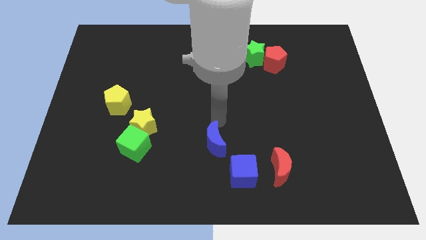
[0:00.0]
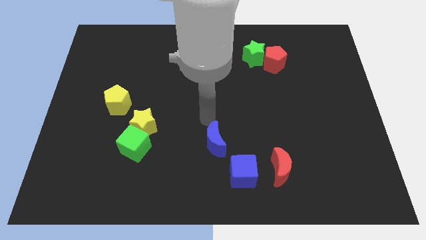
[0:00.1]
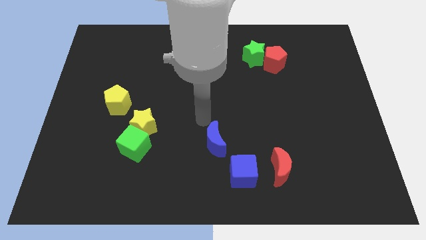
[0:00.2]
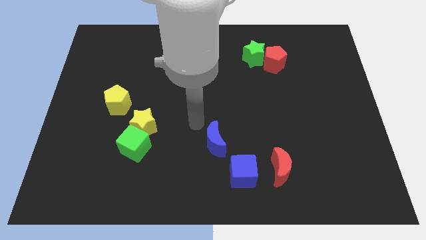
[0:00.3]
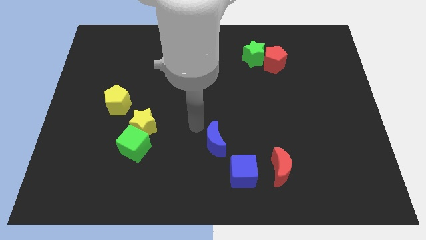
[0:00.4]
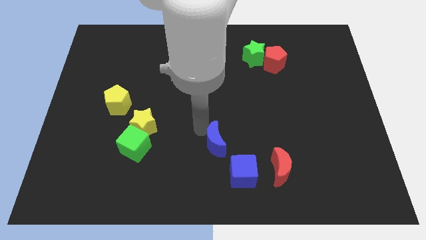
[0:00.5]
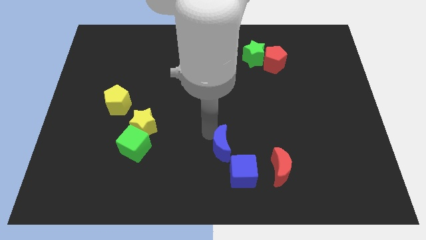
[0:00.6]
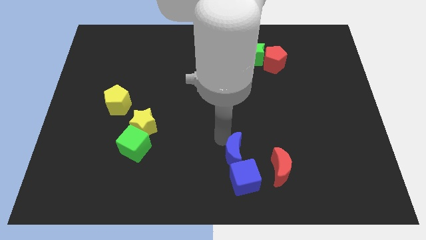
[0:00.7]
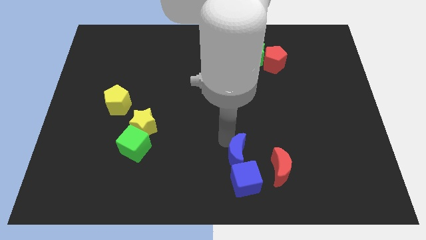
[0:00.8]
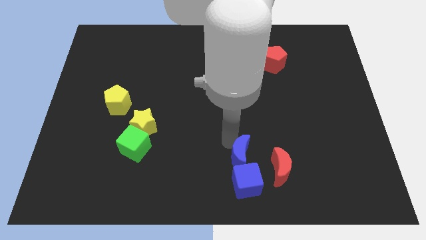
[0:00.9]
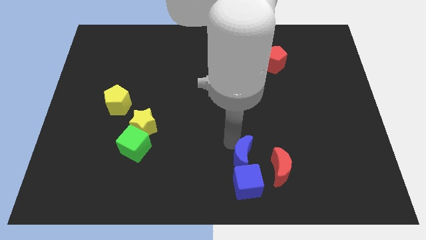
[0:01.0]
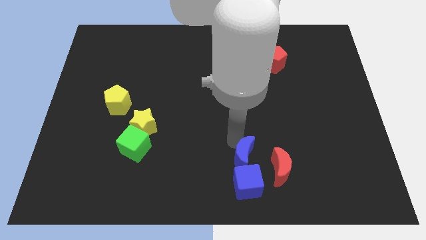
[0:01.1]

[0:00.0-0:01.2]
slide the blue crescent to the top side of the blue cube

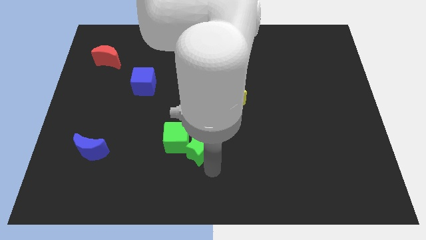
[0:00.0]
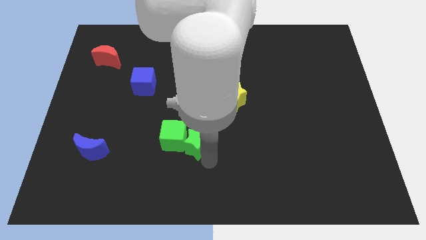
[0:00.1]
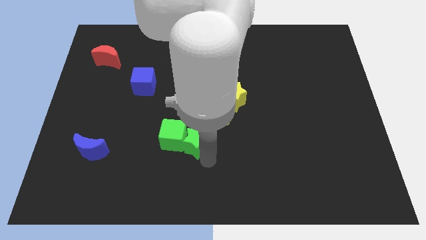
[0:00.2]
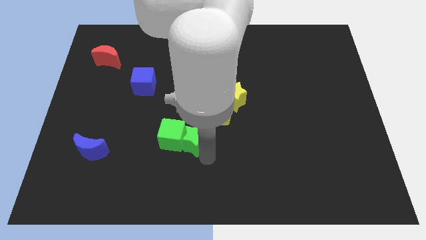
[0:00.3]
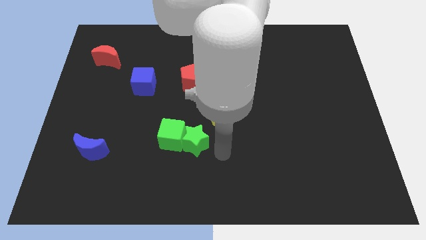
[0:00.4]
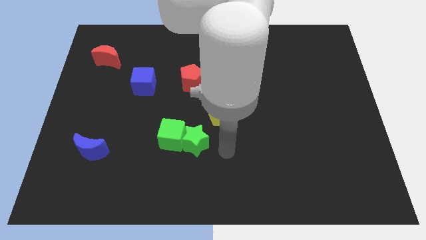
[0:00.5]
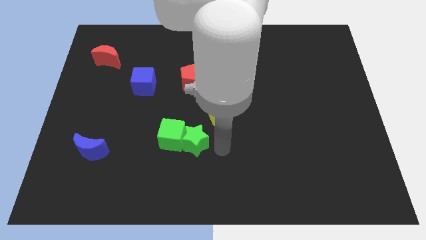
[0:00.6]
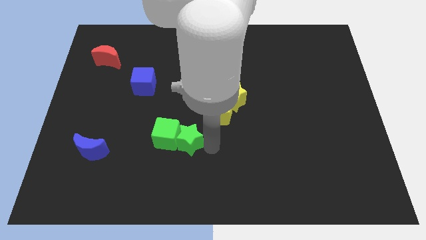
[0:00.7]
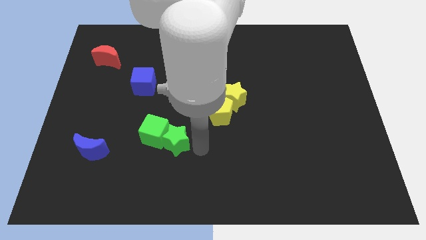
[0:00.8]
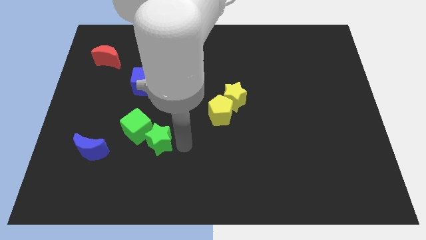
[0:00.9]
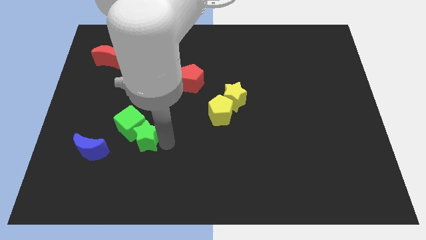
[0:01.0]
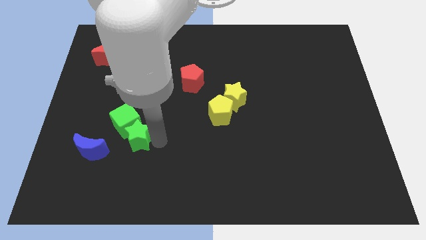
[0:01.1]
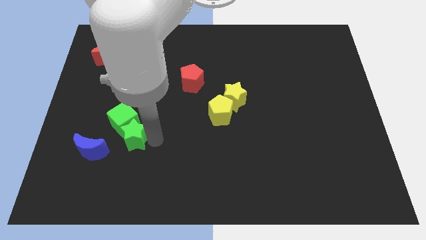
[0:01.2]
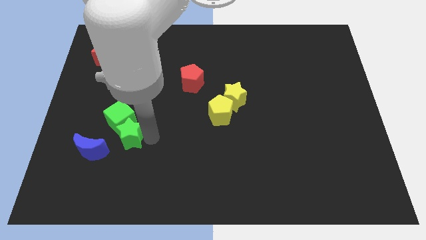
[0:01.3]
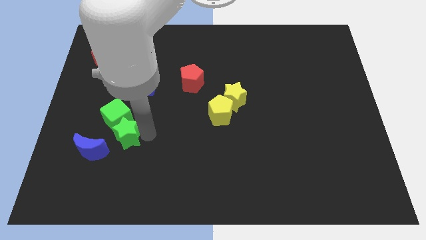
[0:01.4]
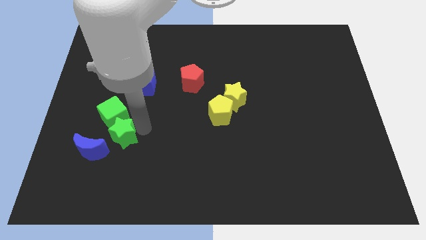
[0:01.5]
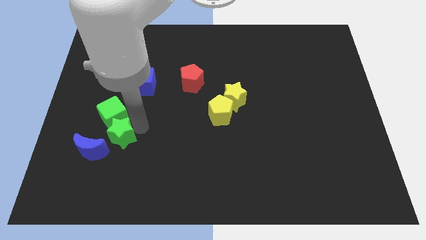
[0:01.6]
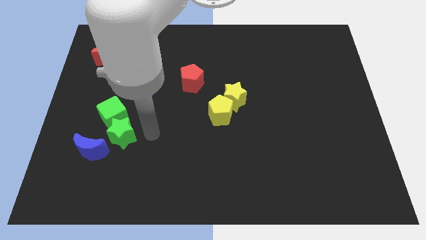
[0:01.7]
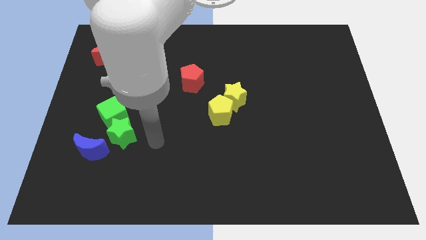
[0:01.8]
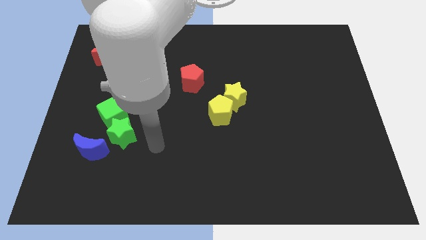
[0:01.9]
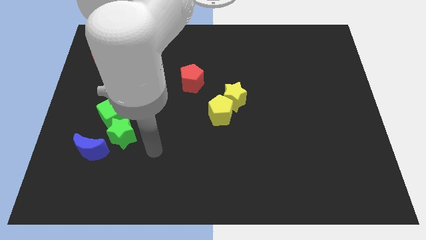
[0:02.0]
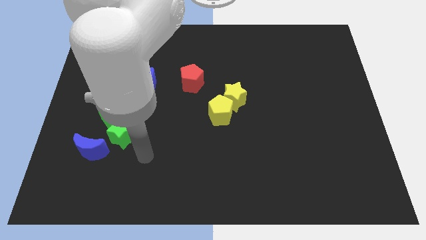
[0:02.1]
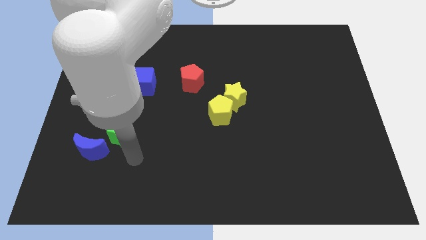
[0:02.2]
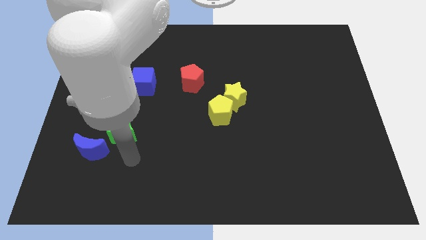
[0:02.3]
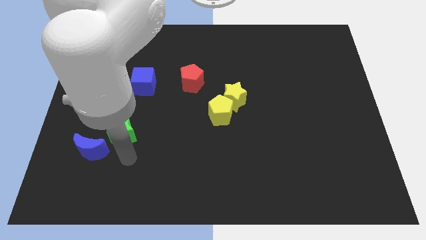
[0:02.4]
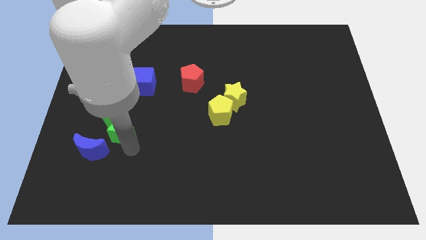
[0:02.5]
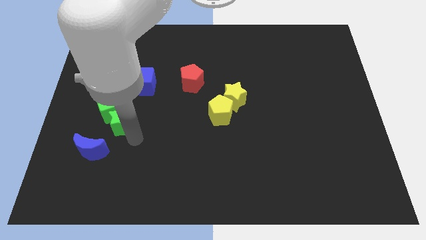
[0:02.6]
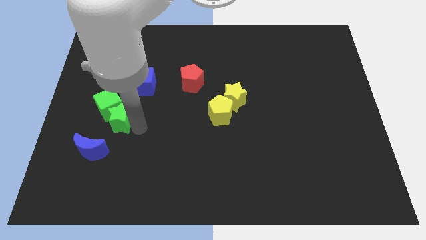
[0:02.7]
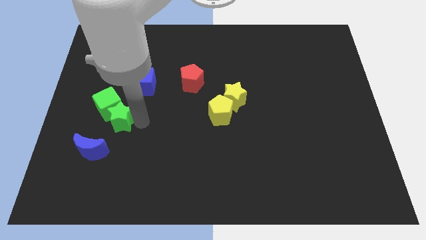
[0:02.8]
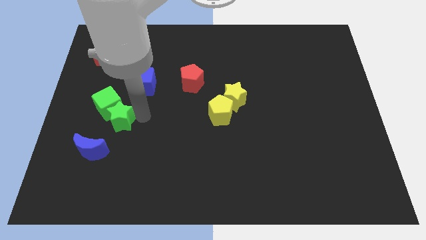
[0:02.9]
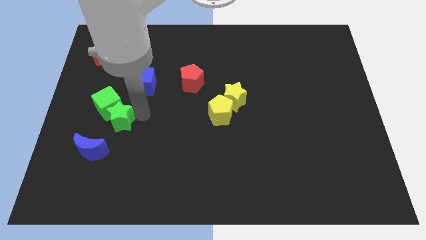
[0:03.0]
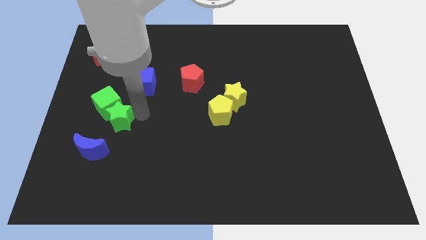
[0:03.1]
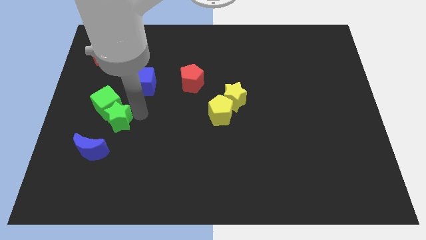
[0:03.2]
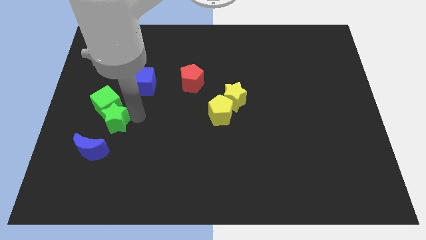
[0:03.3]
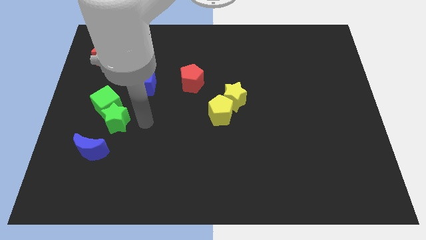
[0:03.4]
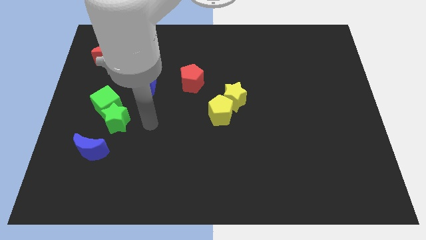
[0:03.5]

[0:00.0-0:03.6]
move the green blocks slightly left

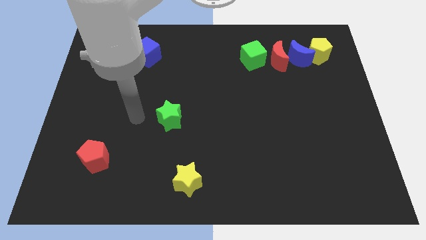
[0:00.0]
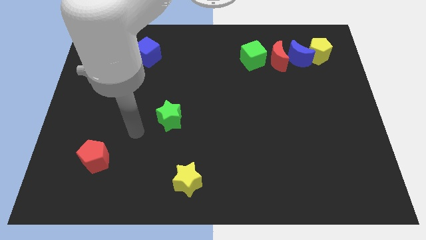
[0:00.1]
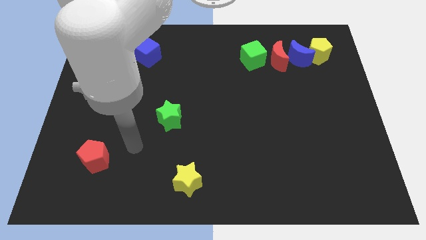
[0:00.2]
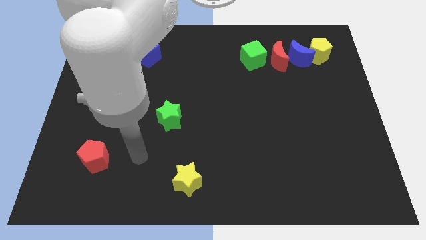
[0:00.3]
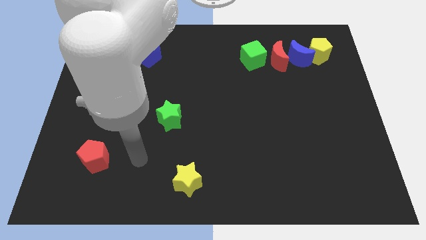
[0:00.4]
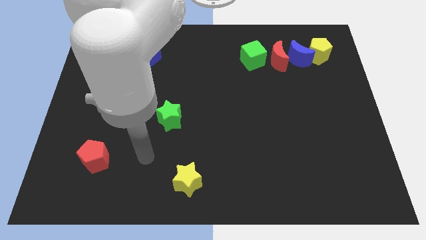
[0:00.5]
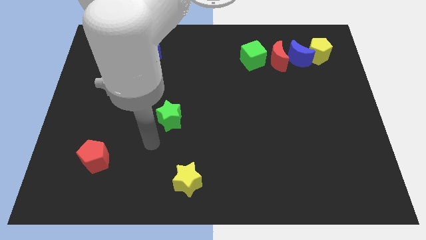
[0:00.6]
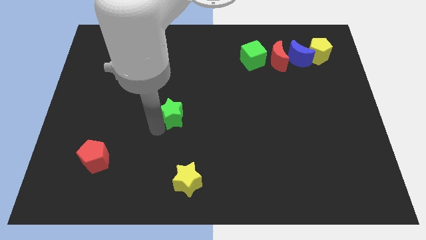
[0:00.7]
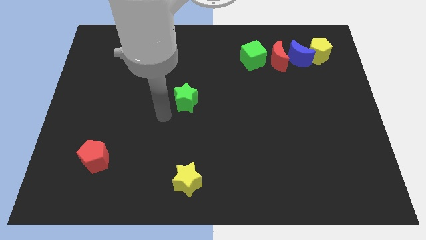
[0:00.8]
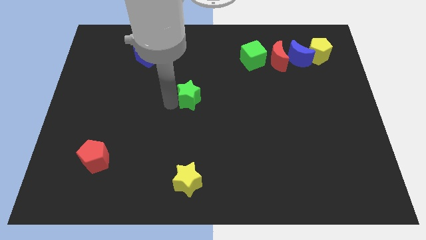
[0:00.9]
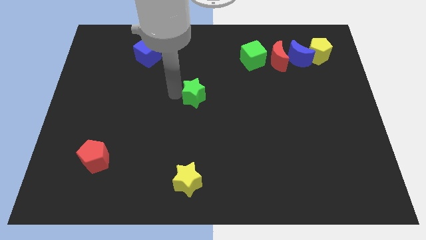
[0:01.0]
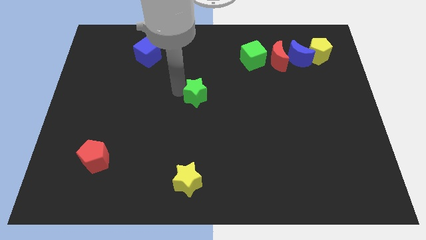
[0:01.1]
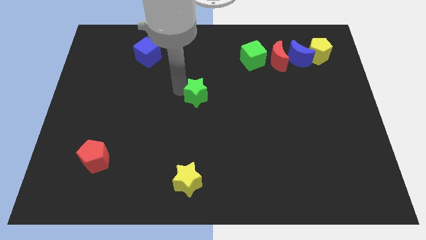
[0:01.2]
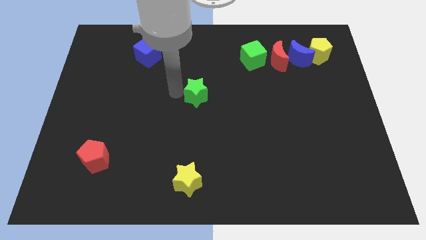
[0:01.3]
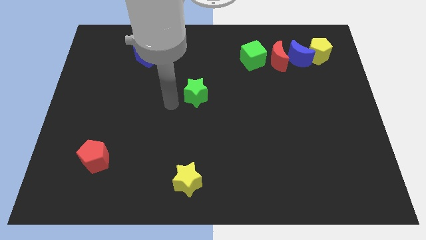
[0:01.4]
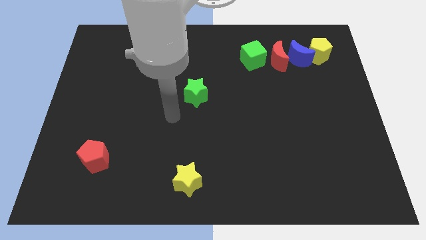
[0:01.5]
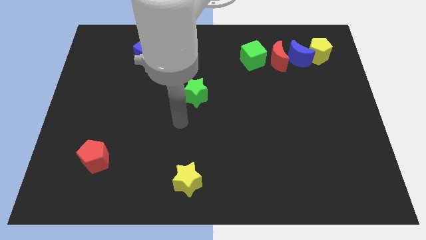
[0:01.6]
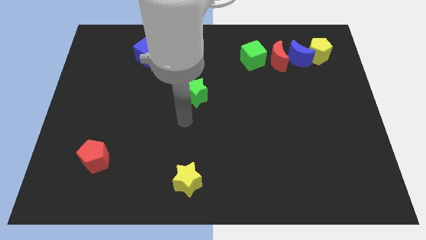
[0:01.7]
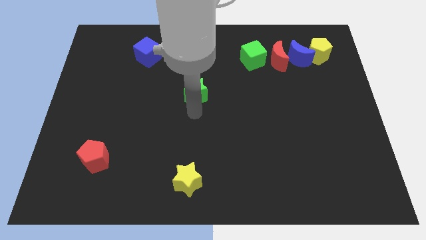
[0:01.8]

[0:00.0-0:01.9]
move the green star vertically above the yellow star

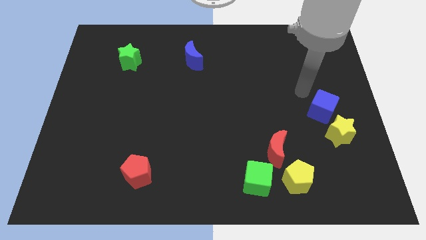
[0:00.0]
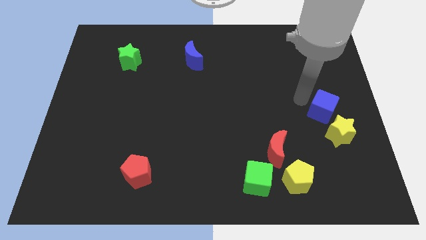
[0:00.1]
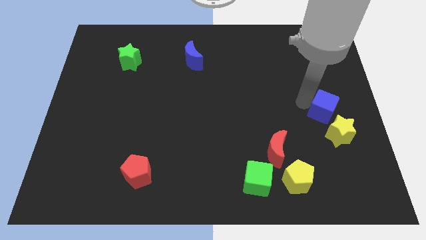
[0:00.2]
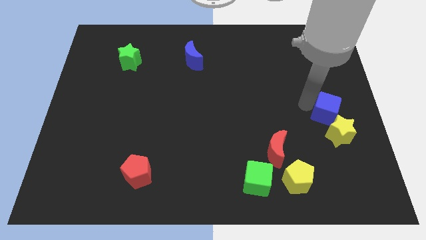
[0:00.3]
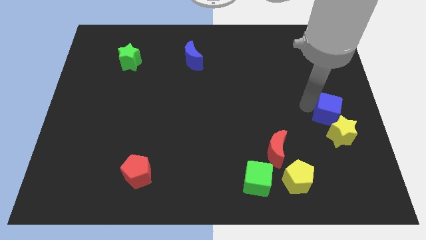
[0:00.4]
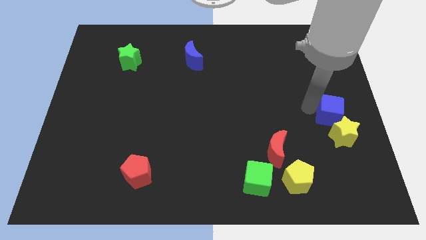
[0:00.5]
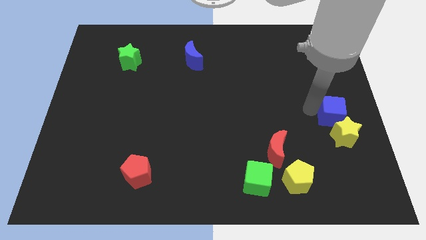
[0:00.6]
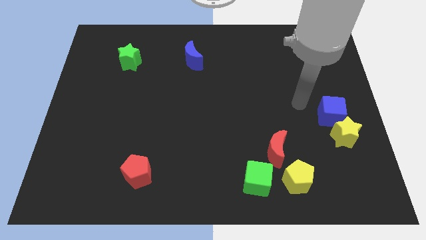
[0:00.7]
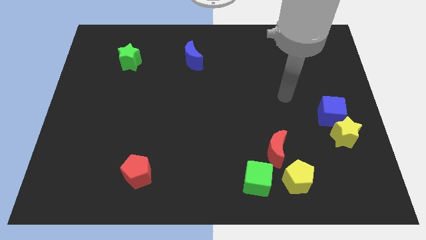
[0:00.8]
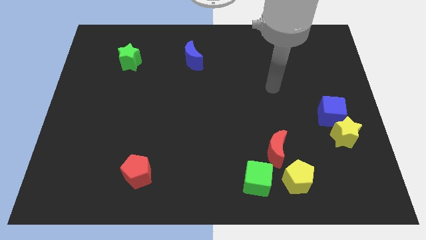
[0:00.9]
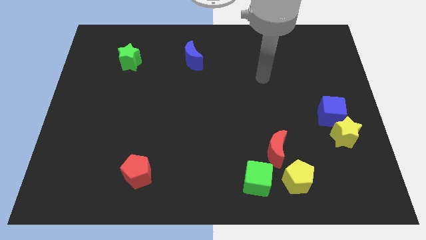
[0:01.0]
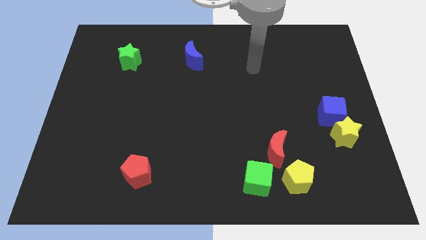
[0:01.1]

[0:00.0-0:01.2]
push the blue cube into yellow star

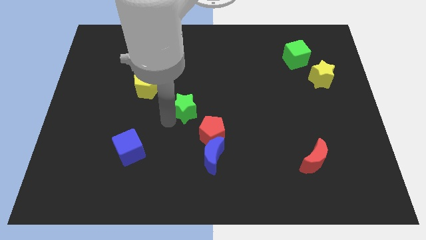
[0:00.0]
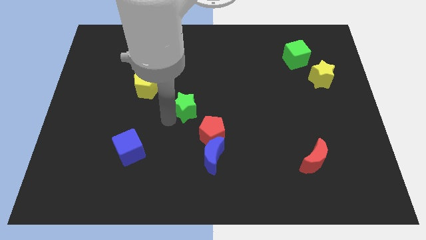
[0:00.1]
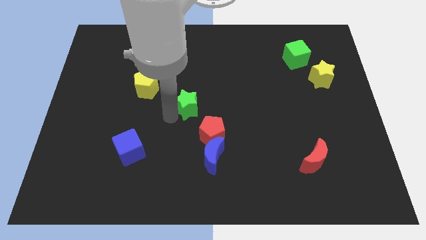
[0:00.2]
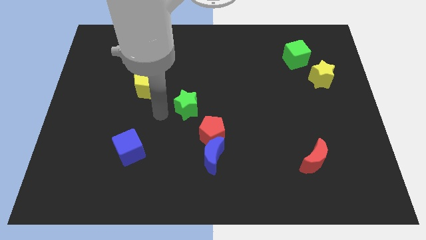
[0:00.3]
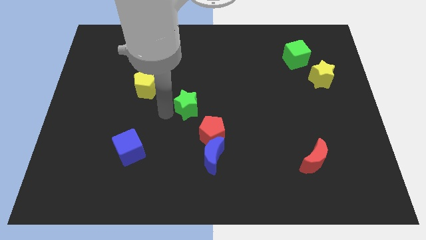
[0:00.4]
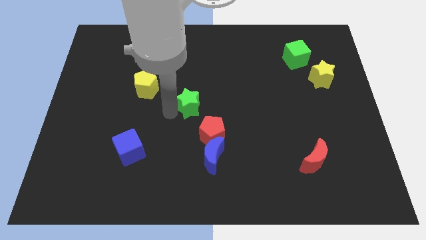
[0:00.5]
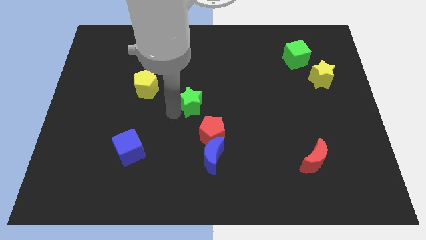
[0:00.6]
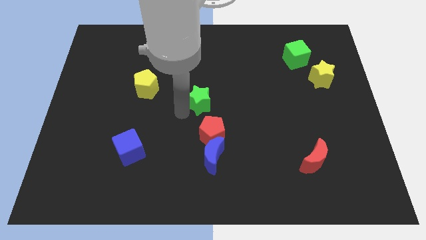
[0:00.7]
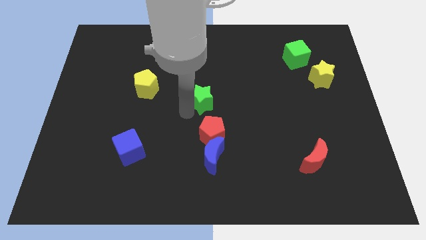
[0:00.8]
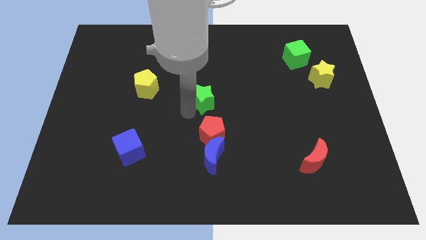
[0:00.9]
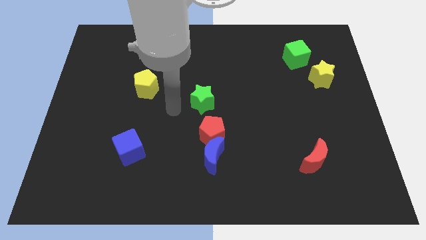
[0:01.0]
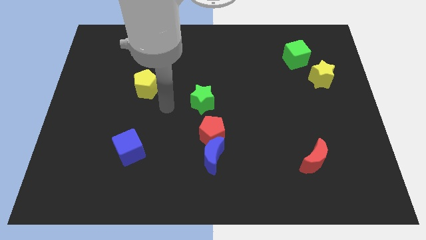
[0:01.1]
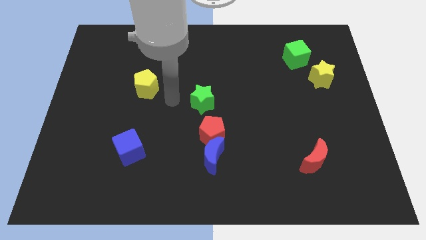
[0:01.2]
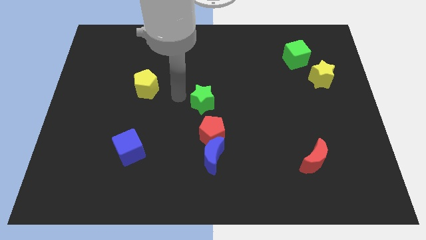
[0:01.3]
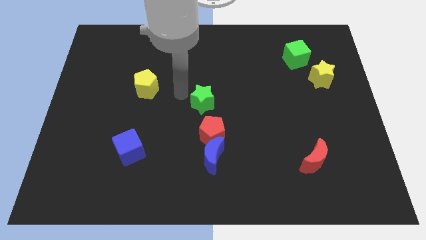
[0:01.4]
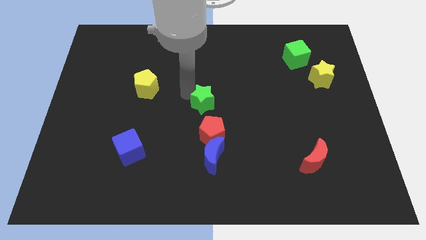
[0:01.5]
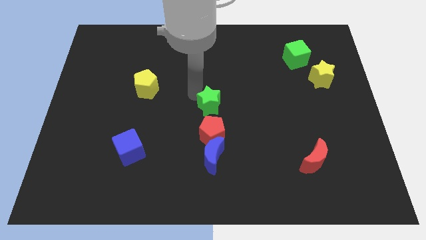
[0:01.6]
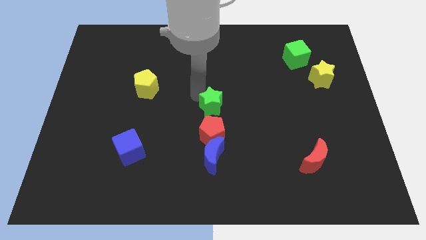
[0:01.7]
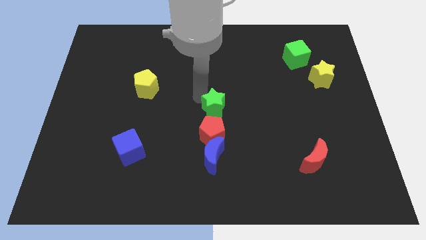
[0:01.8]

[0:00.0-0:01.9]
place the green star above the red pentagon
